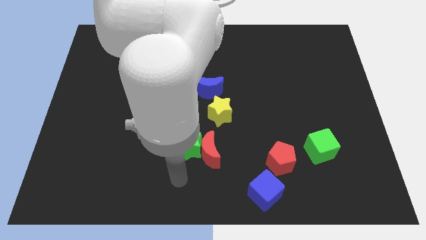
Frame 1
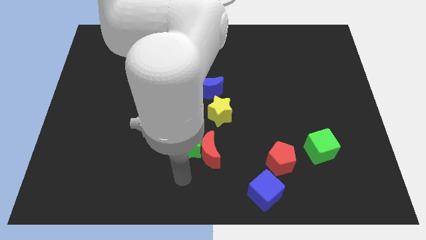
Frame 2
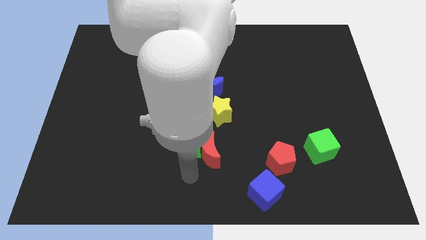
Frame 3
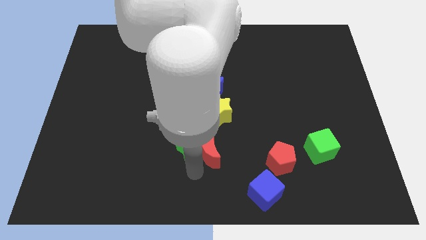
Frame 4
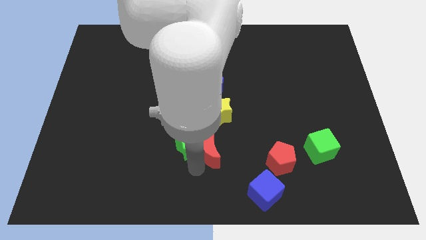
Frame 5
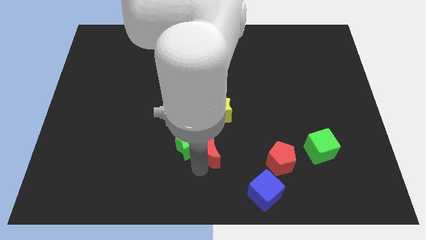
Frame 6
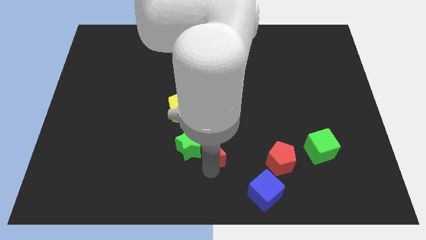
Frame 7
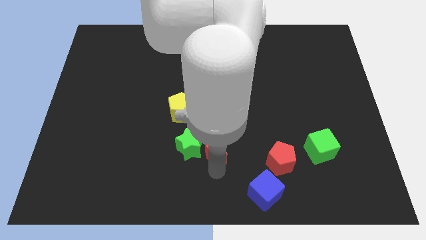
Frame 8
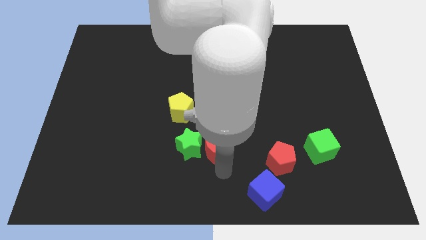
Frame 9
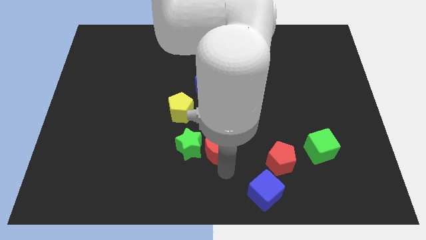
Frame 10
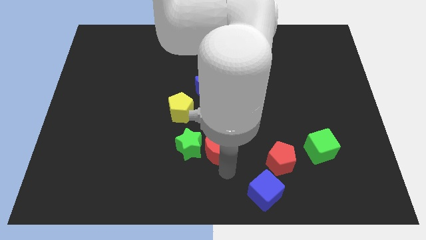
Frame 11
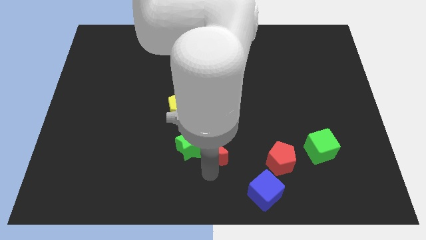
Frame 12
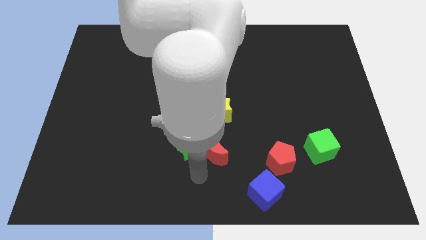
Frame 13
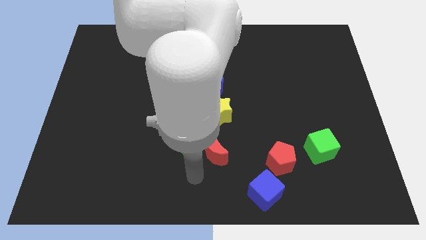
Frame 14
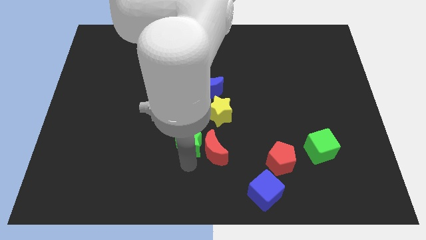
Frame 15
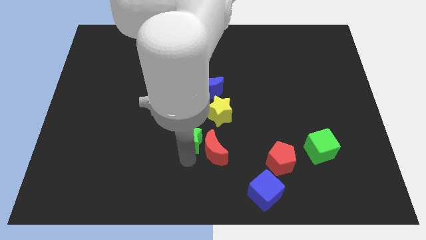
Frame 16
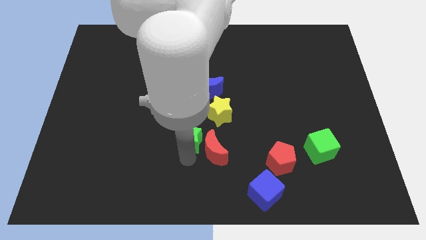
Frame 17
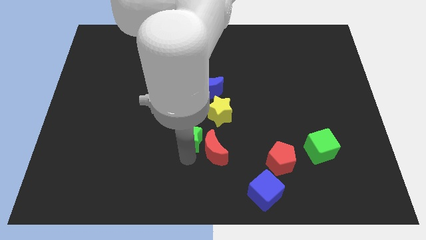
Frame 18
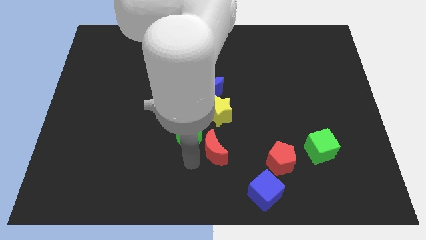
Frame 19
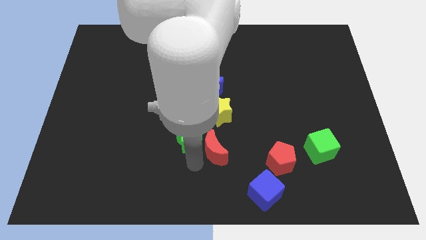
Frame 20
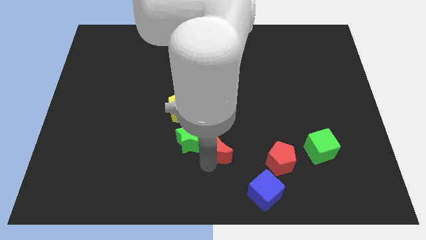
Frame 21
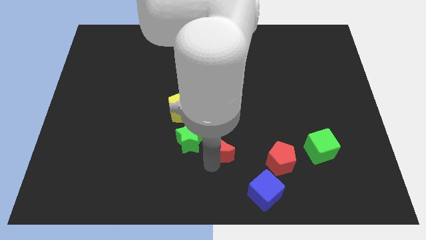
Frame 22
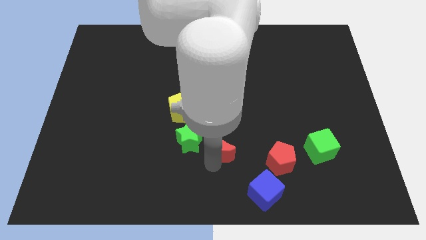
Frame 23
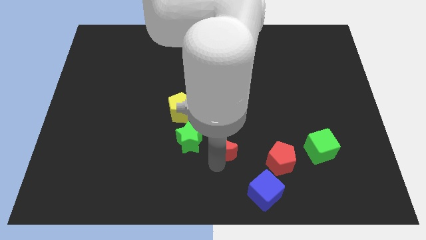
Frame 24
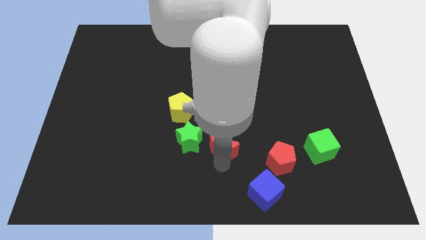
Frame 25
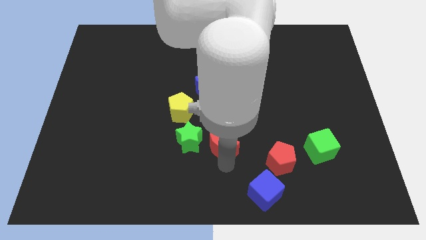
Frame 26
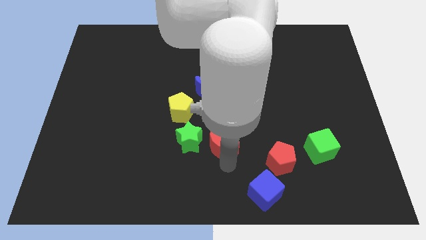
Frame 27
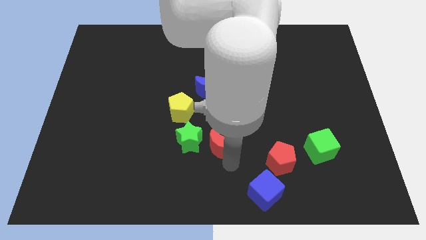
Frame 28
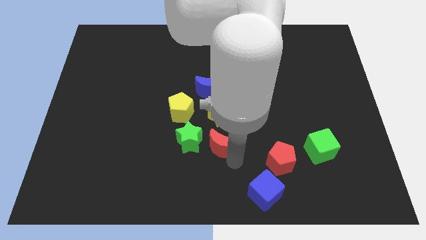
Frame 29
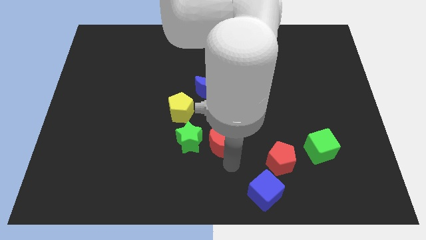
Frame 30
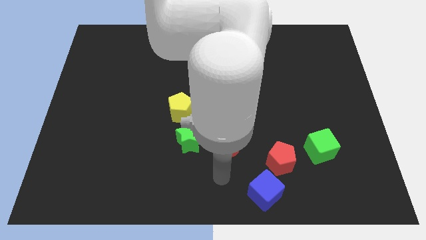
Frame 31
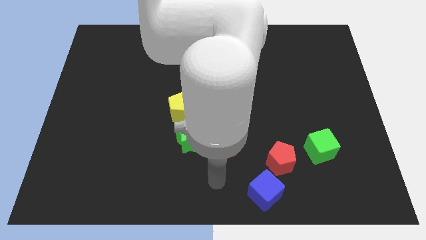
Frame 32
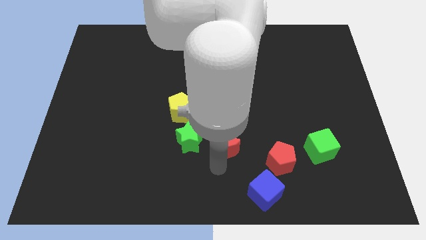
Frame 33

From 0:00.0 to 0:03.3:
move the red moon down to the yellow star

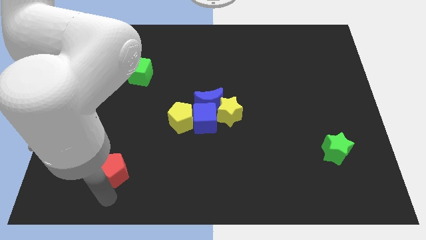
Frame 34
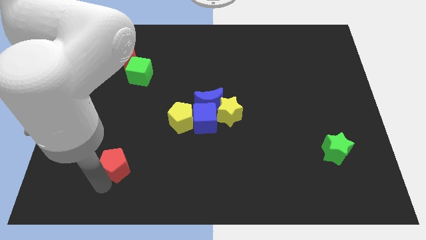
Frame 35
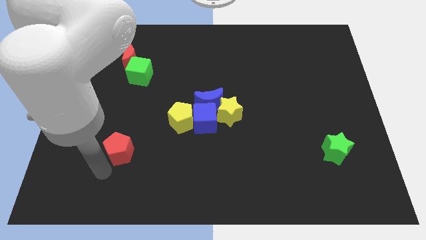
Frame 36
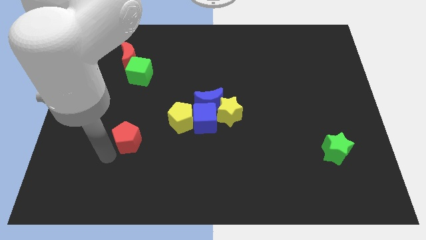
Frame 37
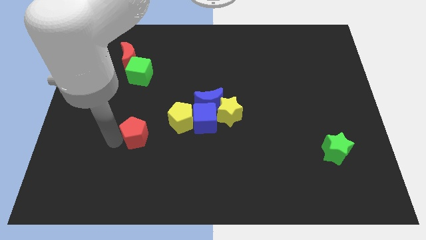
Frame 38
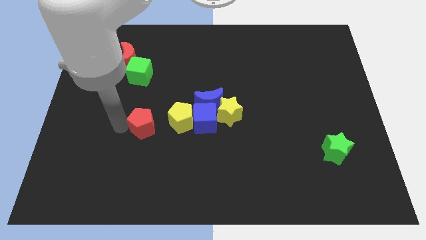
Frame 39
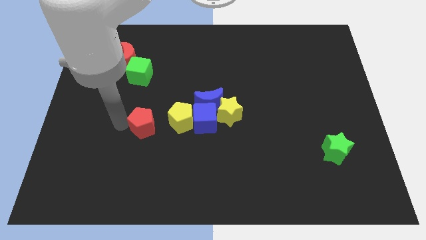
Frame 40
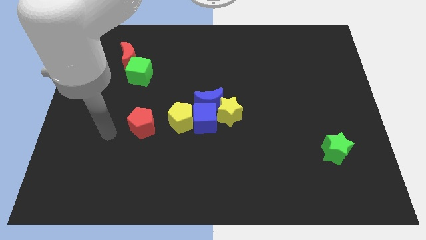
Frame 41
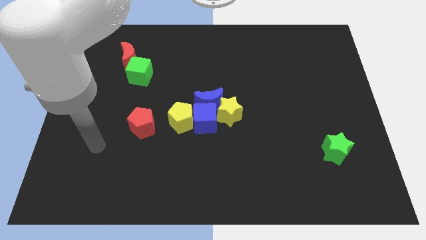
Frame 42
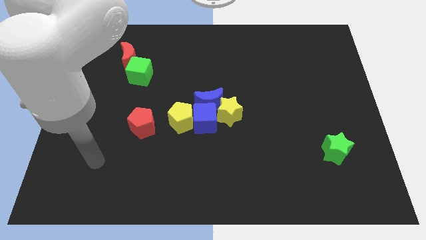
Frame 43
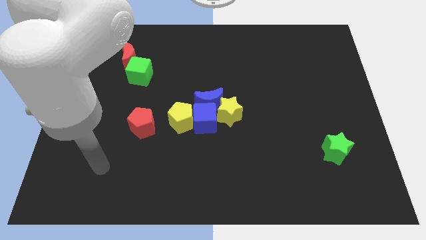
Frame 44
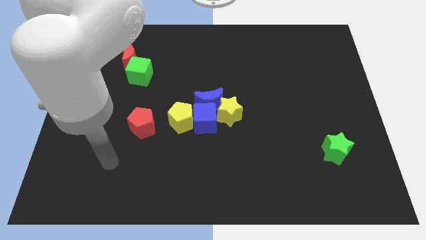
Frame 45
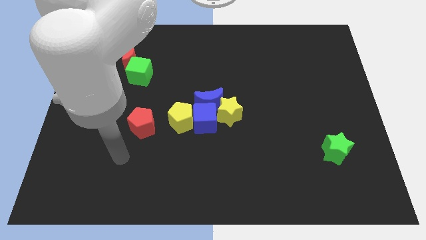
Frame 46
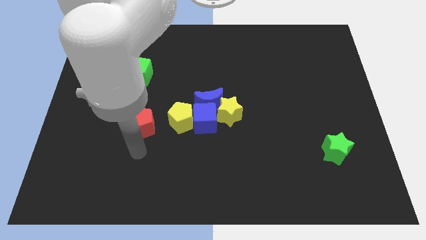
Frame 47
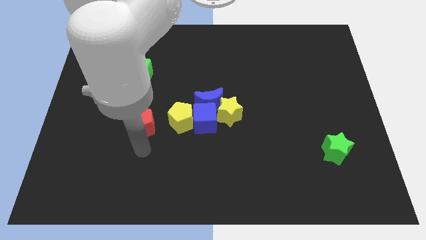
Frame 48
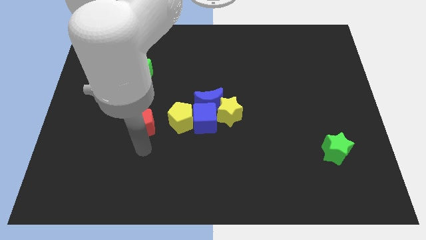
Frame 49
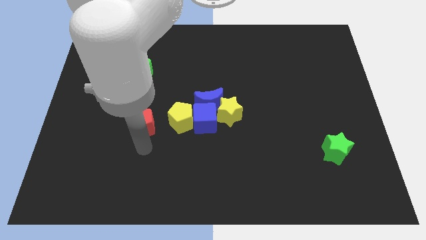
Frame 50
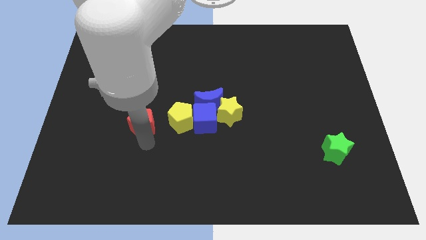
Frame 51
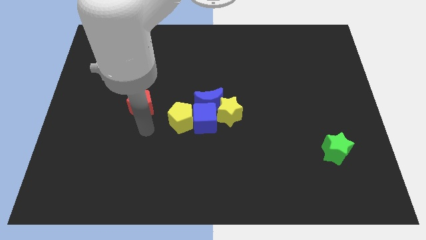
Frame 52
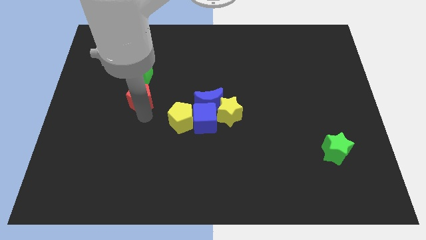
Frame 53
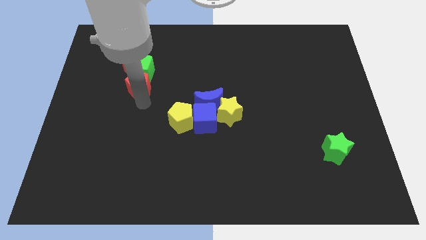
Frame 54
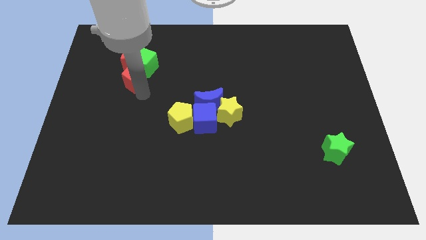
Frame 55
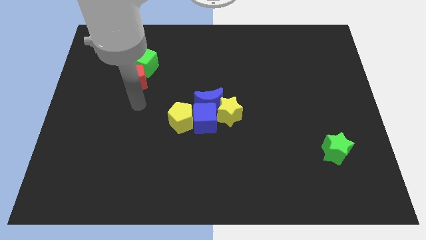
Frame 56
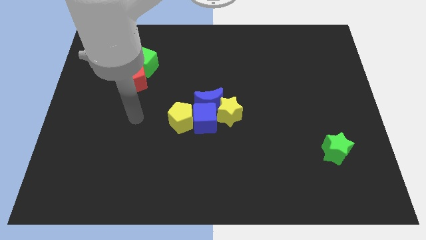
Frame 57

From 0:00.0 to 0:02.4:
push red pentagon towards green cube

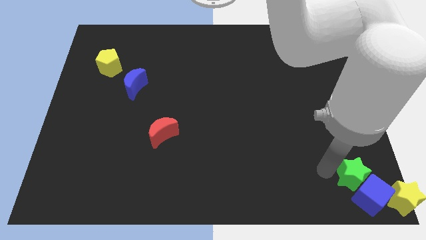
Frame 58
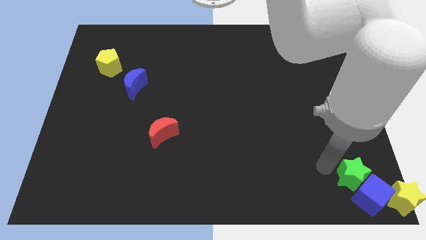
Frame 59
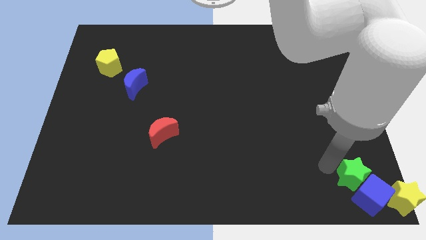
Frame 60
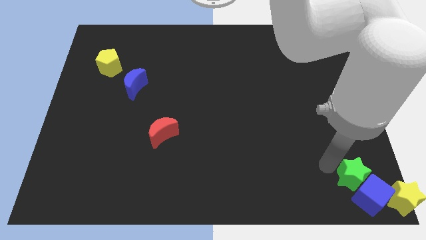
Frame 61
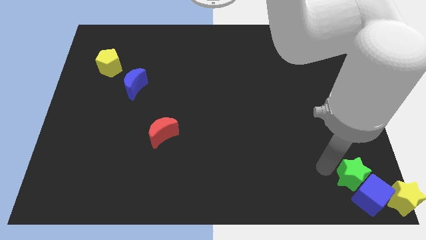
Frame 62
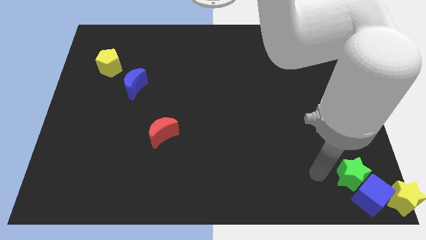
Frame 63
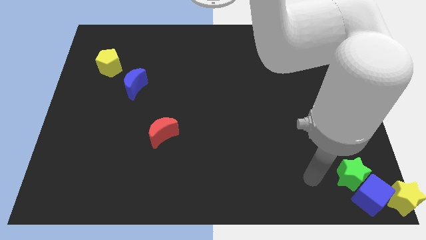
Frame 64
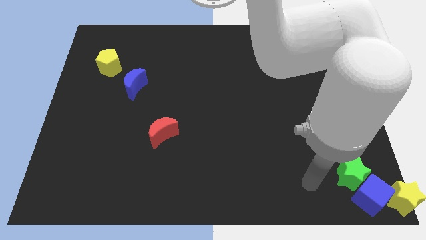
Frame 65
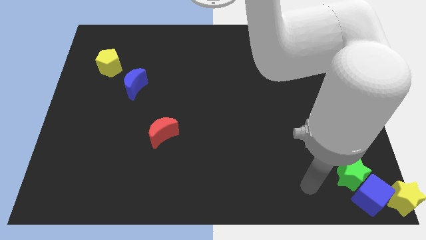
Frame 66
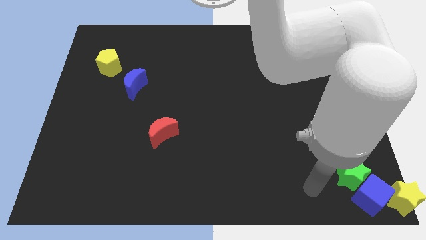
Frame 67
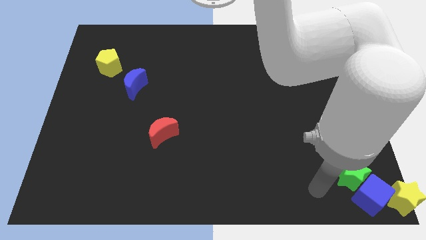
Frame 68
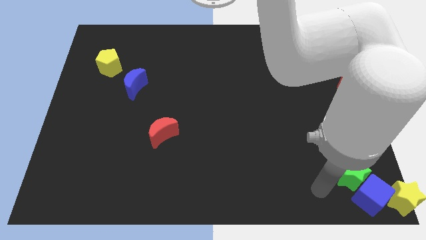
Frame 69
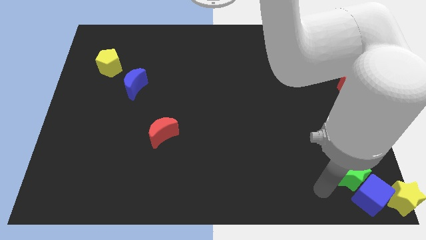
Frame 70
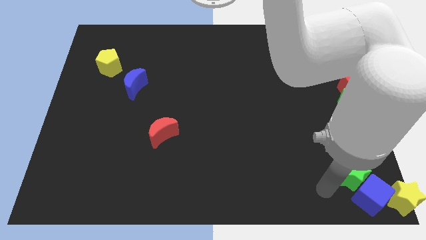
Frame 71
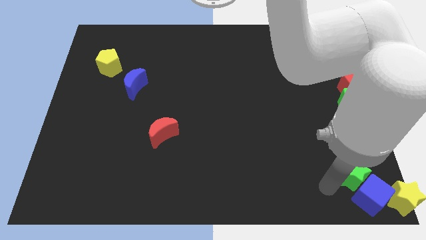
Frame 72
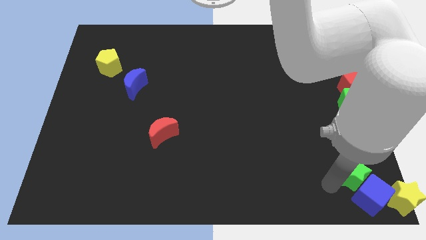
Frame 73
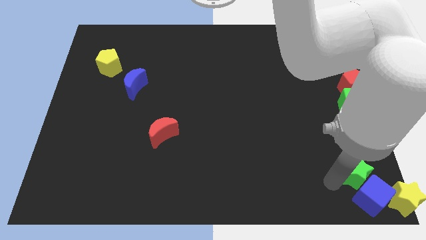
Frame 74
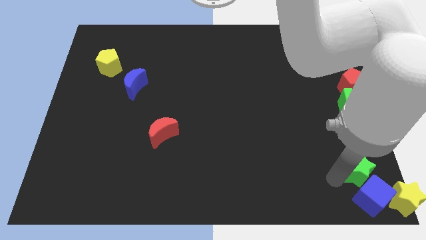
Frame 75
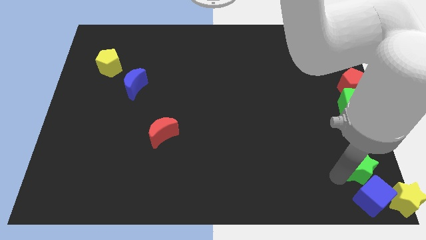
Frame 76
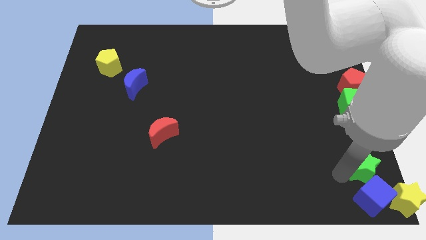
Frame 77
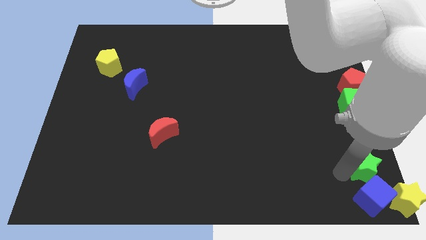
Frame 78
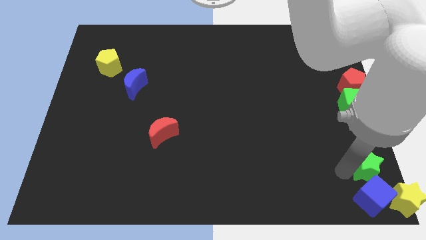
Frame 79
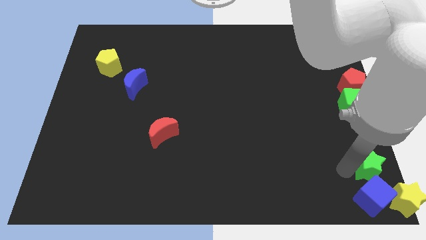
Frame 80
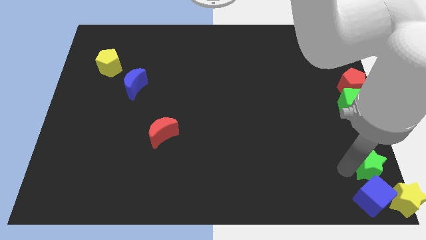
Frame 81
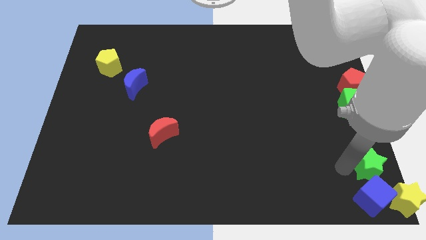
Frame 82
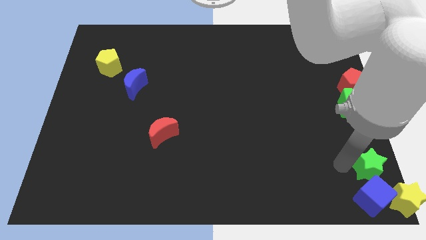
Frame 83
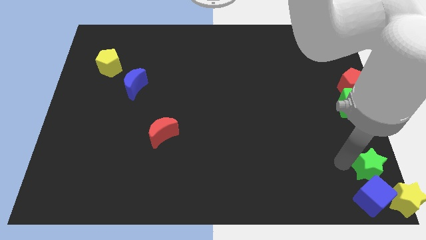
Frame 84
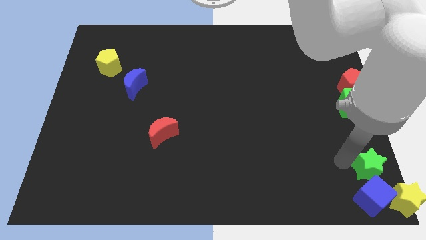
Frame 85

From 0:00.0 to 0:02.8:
put the green star at the top of the blue cube

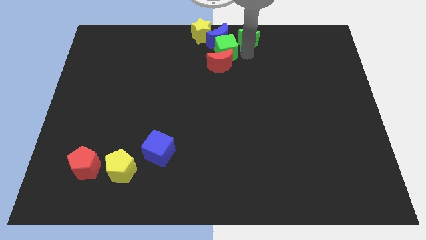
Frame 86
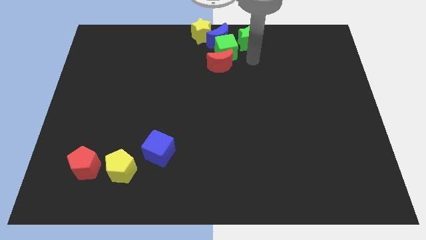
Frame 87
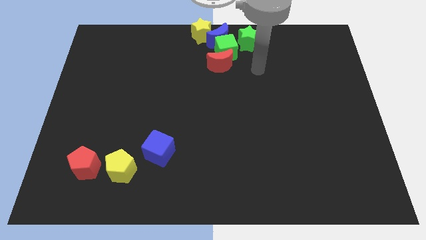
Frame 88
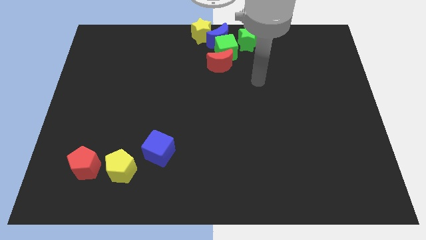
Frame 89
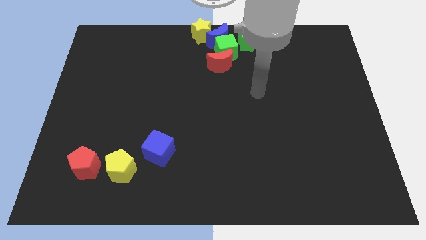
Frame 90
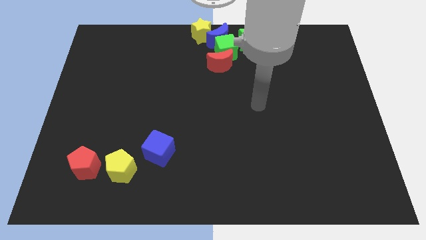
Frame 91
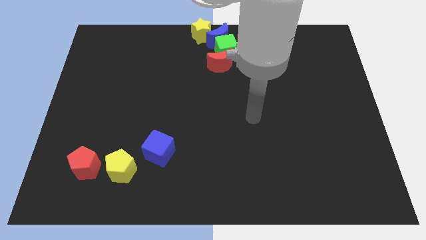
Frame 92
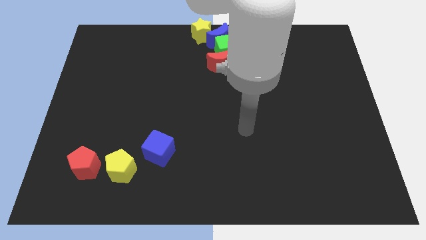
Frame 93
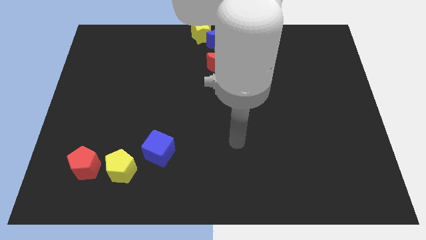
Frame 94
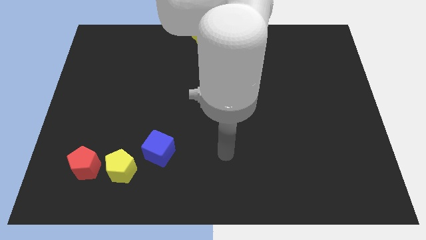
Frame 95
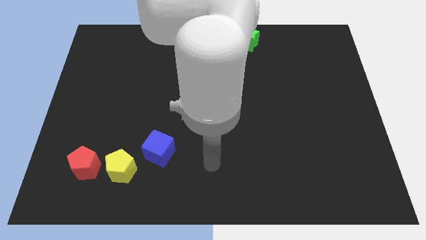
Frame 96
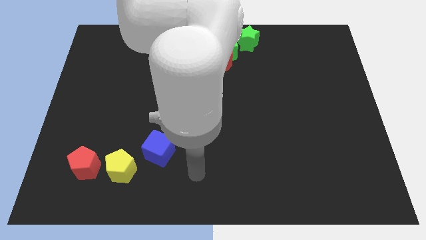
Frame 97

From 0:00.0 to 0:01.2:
move the arm away from the green star
